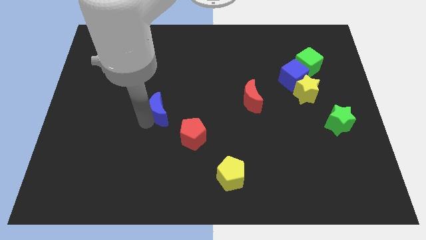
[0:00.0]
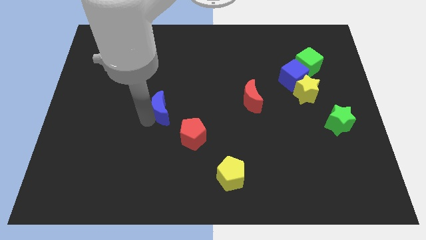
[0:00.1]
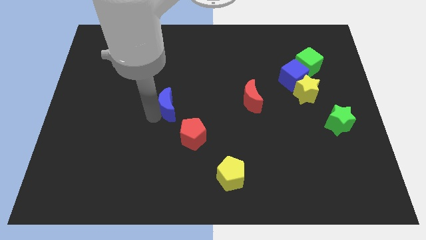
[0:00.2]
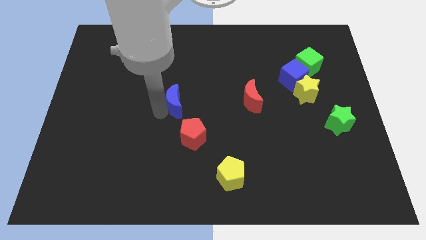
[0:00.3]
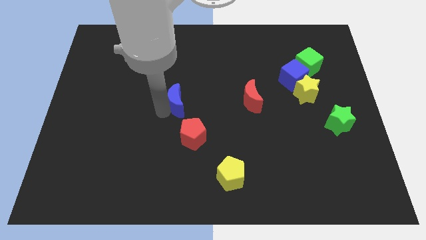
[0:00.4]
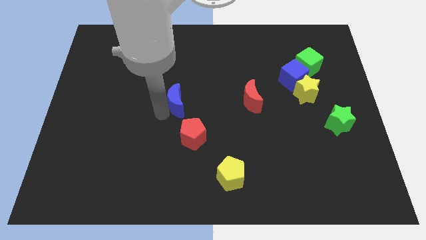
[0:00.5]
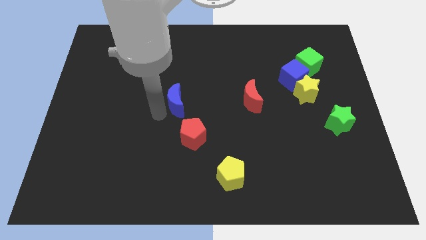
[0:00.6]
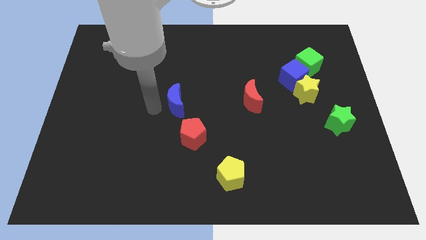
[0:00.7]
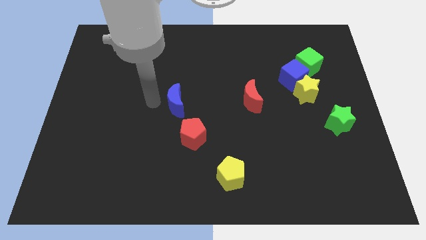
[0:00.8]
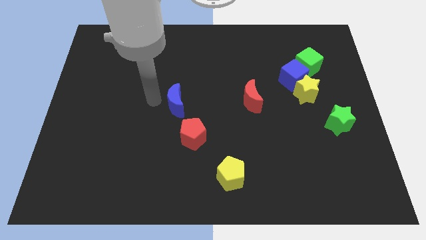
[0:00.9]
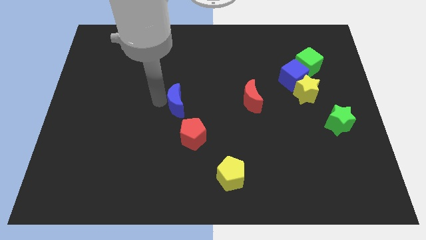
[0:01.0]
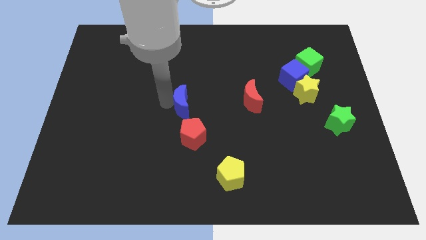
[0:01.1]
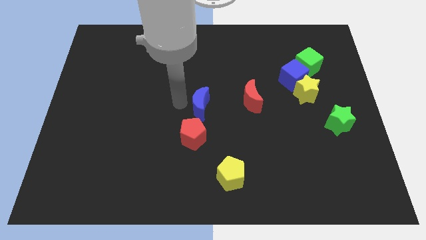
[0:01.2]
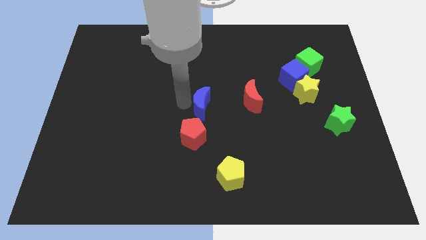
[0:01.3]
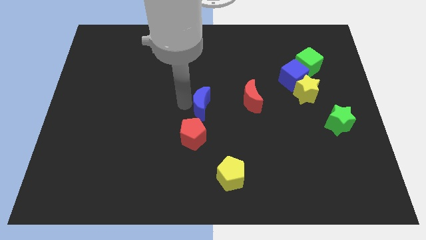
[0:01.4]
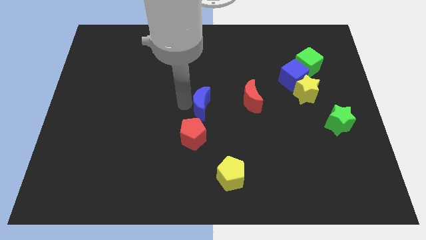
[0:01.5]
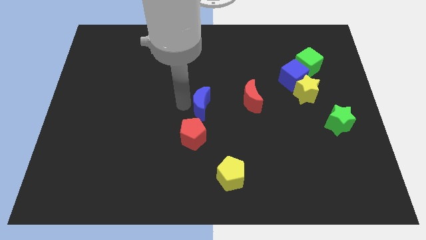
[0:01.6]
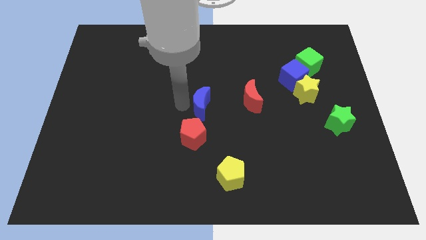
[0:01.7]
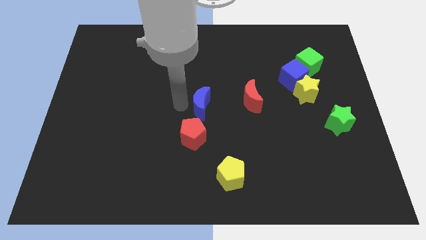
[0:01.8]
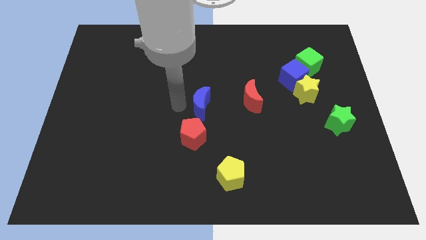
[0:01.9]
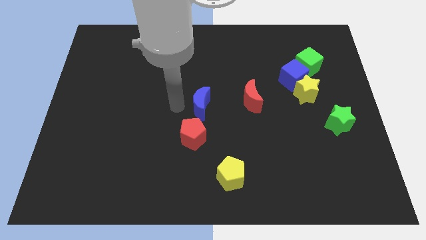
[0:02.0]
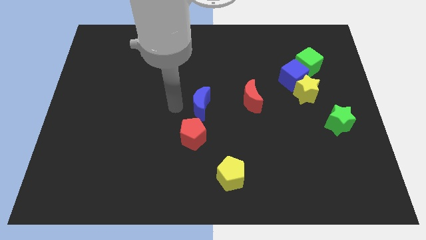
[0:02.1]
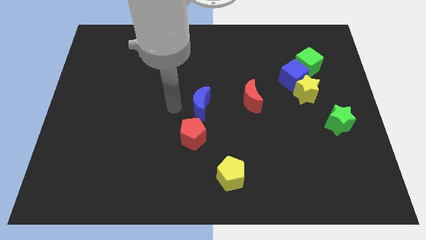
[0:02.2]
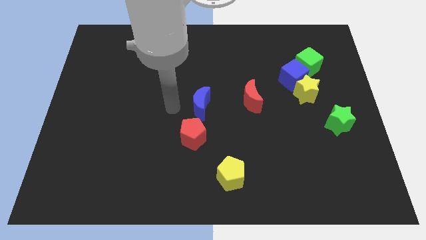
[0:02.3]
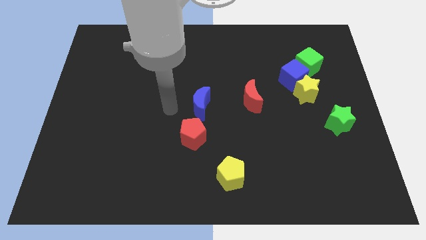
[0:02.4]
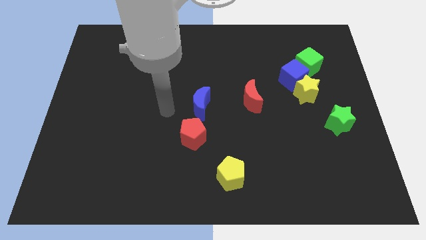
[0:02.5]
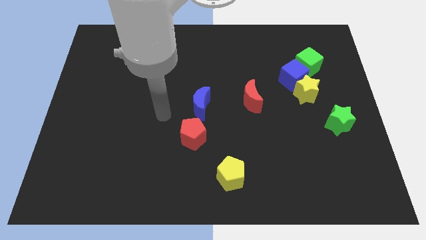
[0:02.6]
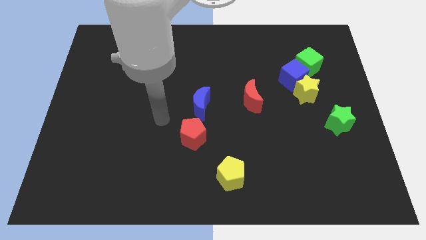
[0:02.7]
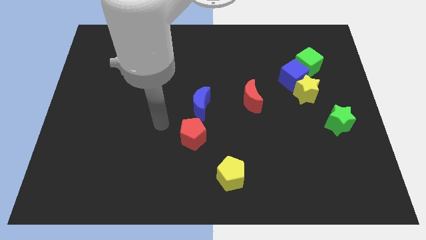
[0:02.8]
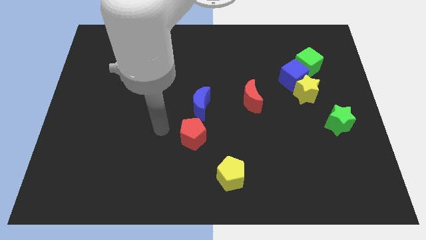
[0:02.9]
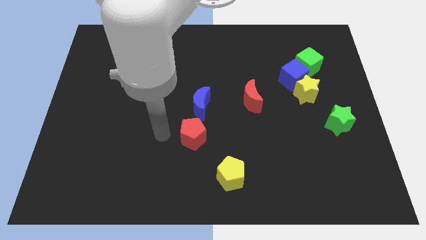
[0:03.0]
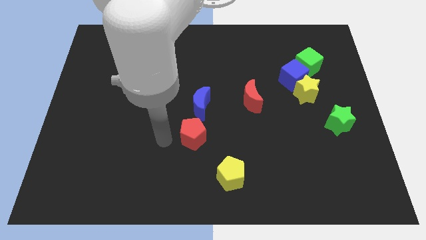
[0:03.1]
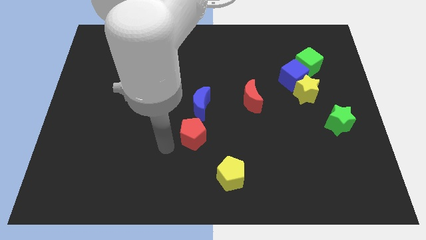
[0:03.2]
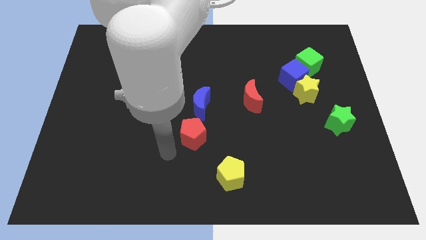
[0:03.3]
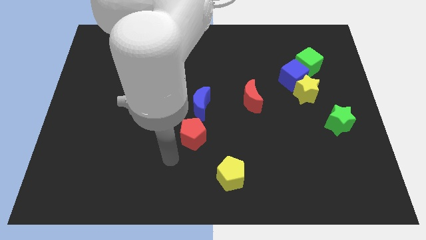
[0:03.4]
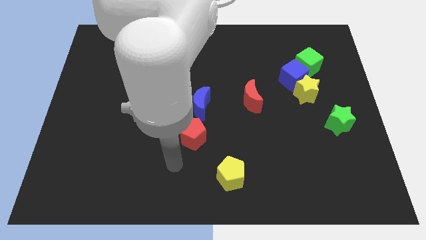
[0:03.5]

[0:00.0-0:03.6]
move the blue crescent to the right of the board

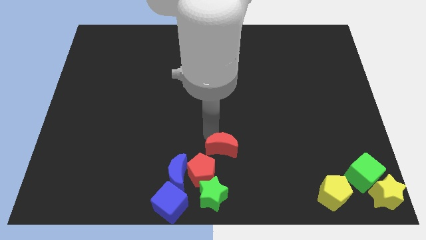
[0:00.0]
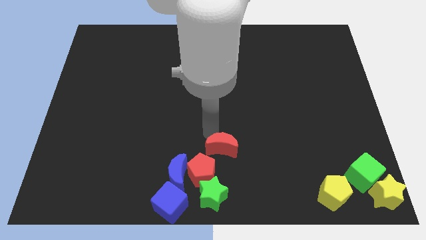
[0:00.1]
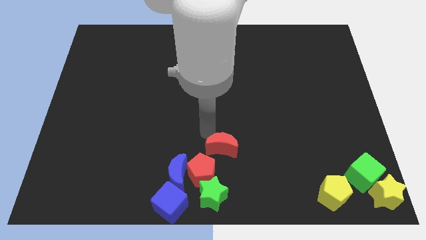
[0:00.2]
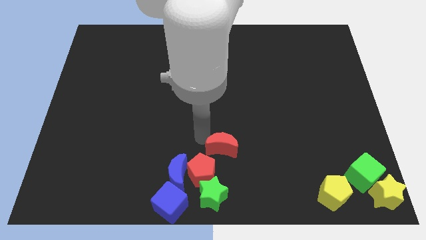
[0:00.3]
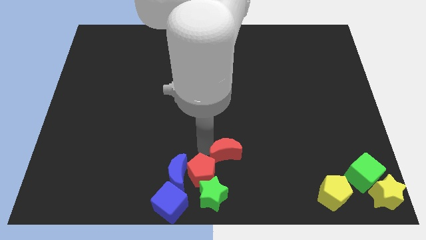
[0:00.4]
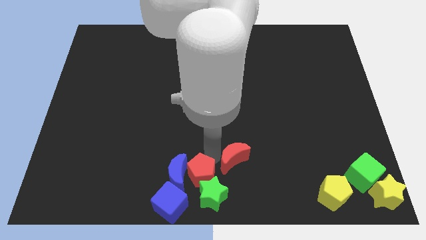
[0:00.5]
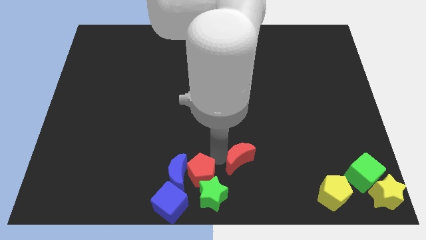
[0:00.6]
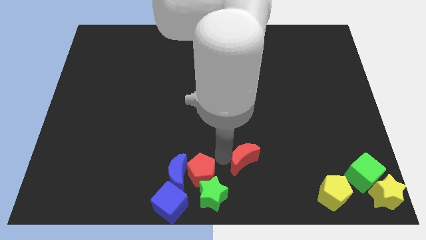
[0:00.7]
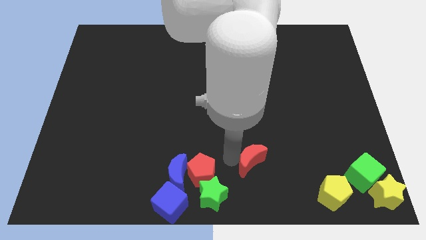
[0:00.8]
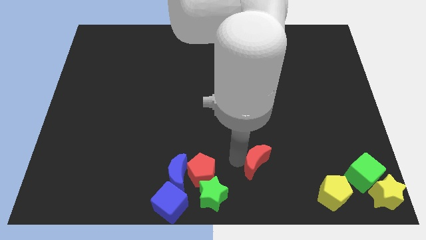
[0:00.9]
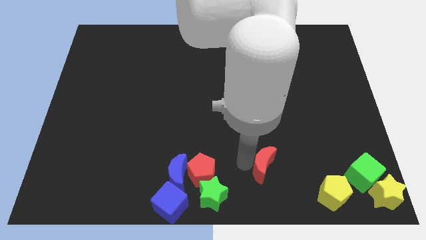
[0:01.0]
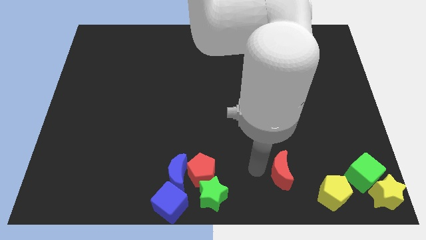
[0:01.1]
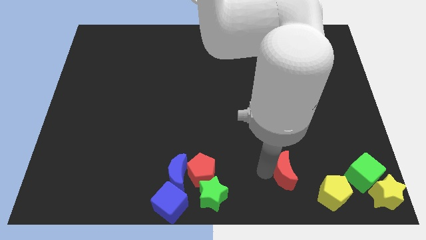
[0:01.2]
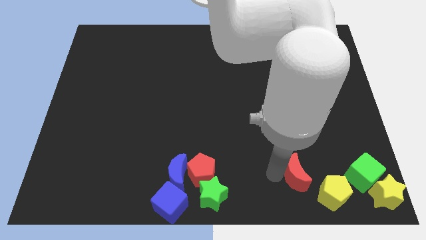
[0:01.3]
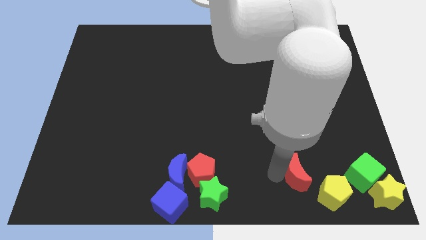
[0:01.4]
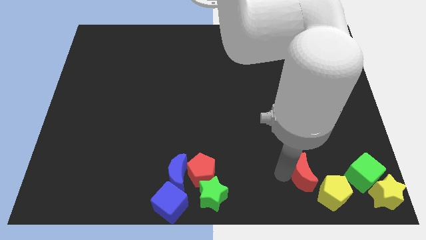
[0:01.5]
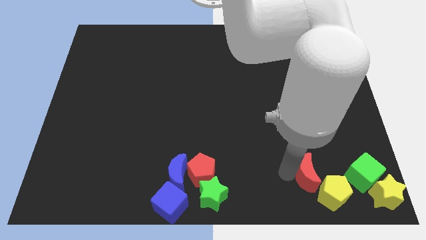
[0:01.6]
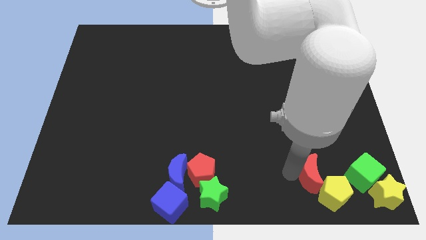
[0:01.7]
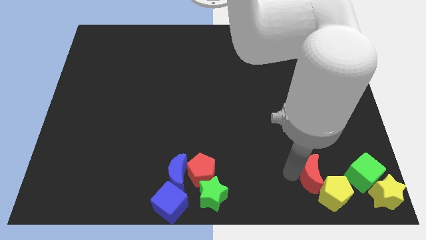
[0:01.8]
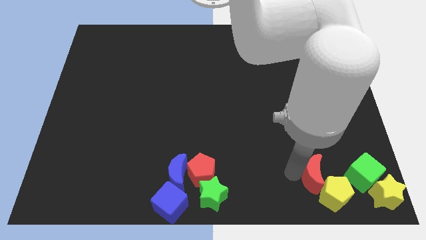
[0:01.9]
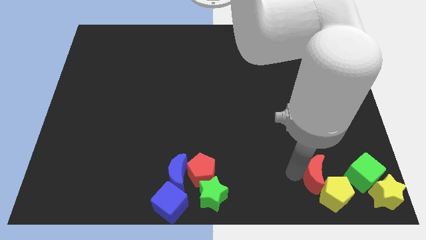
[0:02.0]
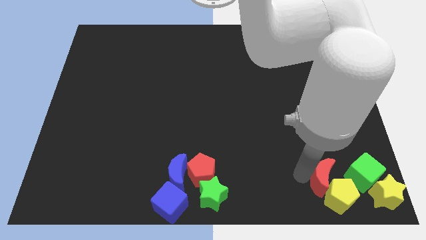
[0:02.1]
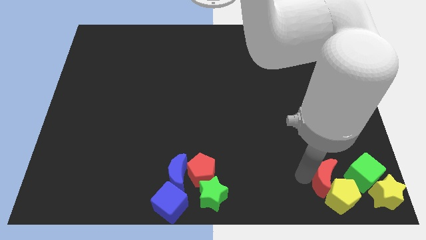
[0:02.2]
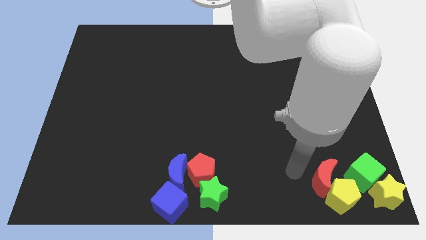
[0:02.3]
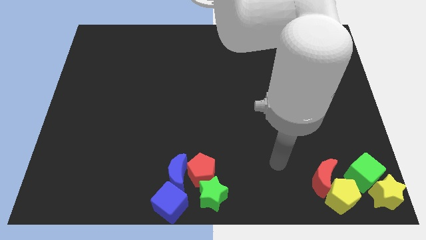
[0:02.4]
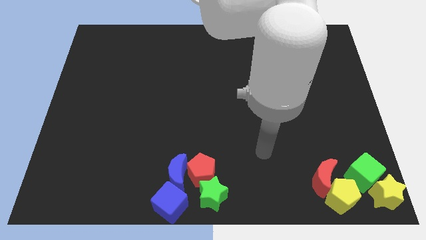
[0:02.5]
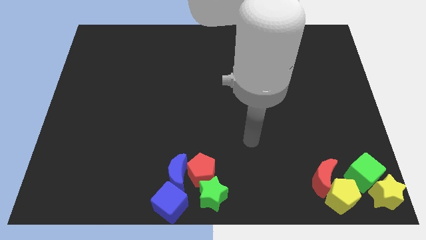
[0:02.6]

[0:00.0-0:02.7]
push the red crescent into the yellow pentagon

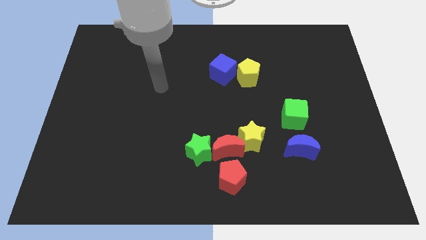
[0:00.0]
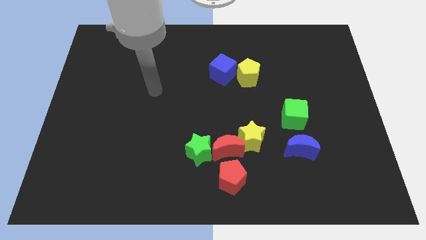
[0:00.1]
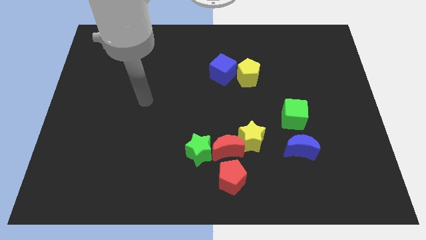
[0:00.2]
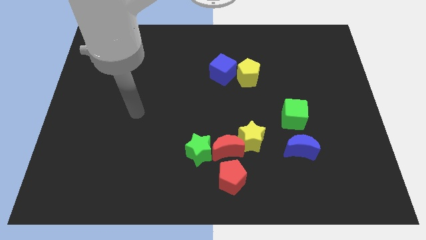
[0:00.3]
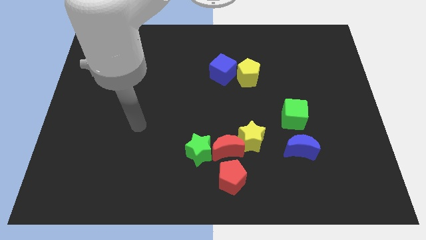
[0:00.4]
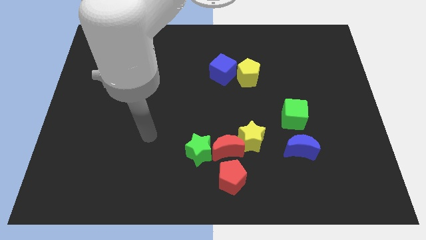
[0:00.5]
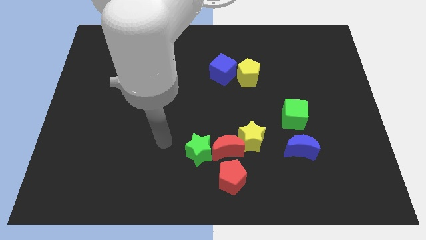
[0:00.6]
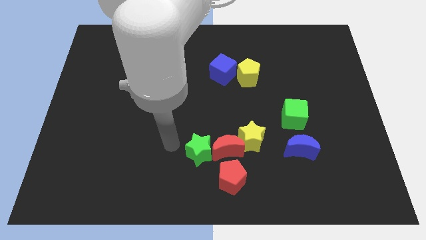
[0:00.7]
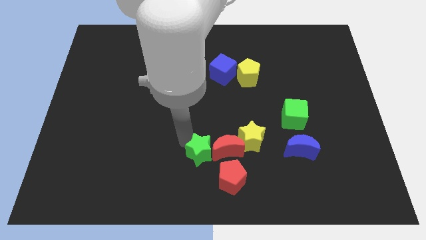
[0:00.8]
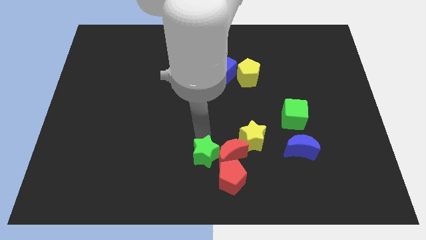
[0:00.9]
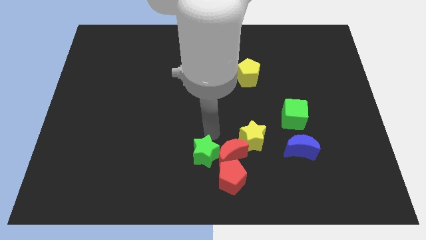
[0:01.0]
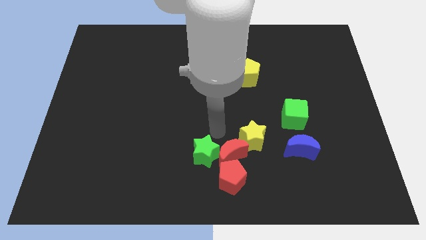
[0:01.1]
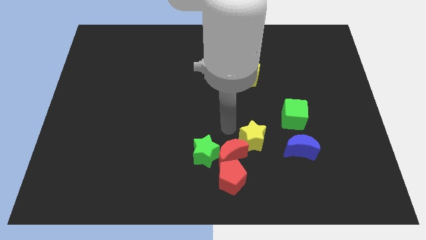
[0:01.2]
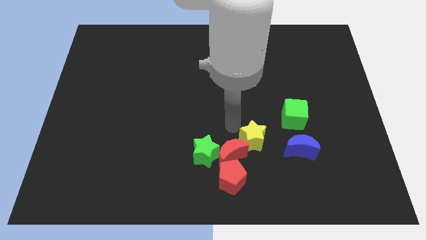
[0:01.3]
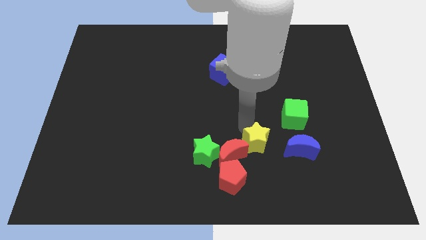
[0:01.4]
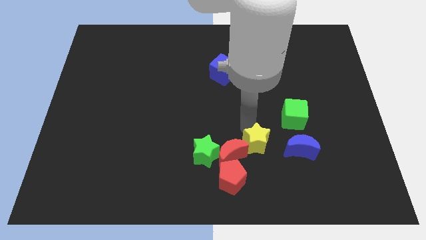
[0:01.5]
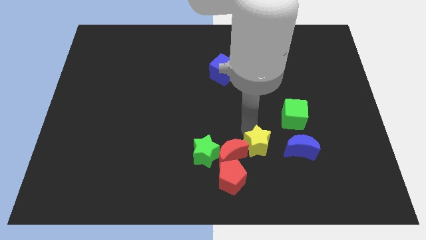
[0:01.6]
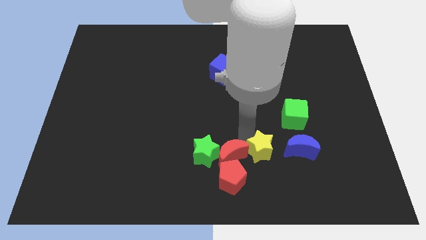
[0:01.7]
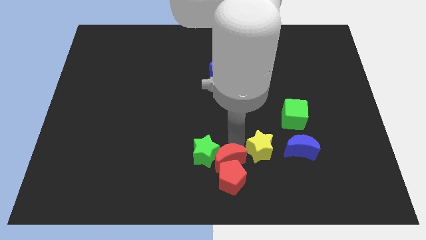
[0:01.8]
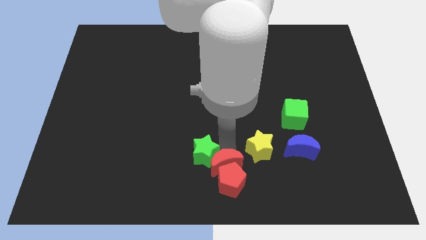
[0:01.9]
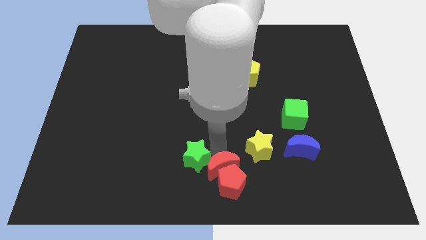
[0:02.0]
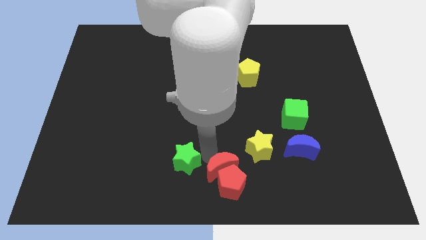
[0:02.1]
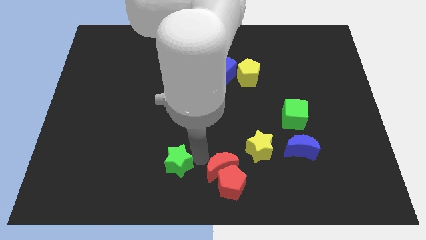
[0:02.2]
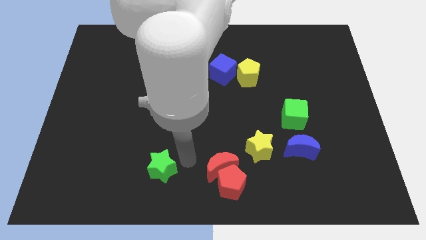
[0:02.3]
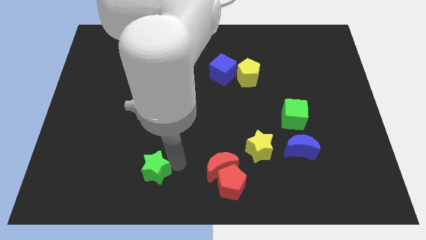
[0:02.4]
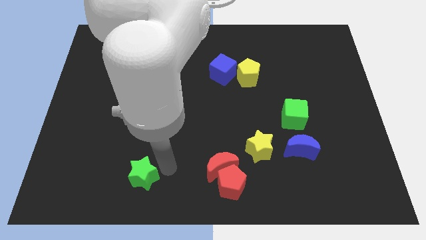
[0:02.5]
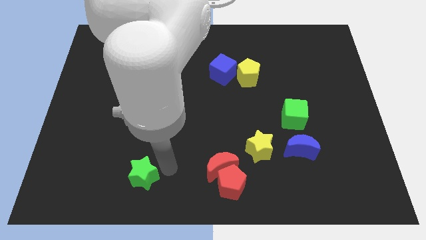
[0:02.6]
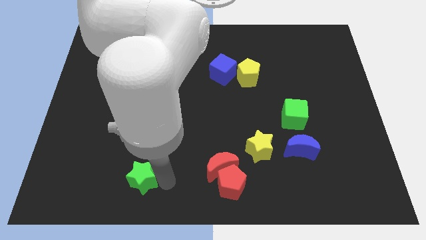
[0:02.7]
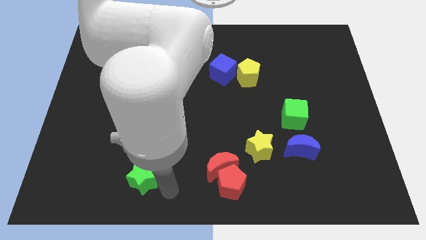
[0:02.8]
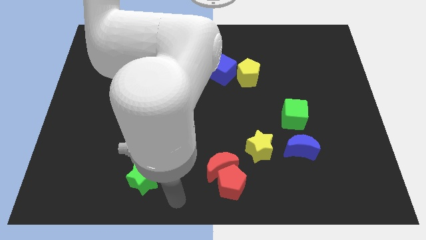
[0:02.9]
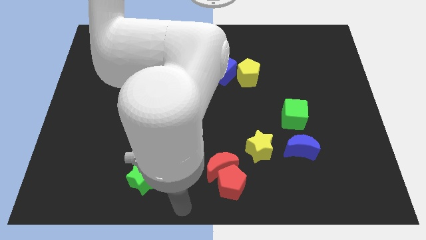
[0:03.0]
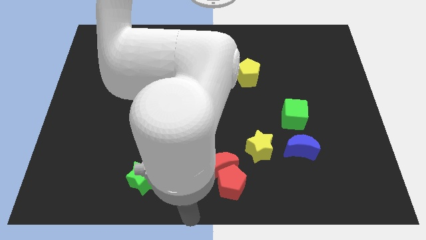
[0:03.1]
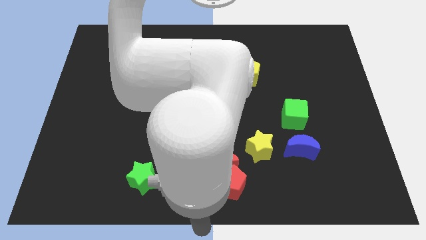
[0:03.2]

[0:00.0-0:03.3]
move the green star to the bottom left
